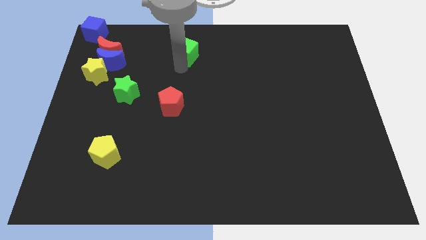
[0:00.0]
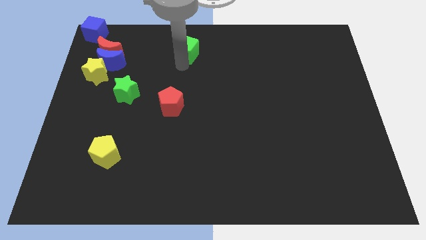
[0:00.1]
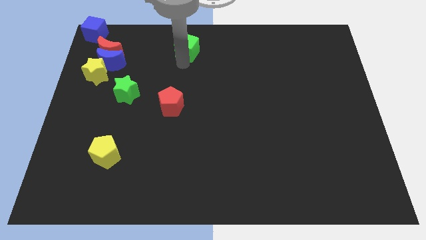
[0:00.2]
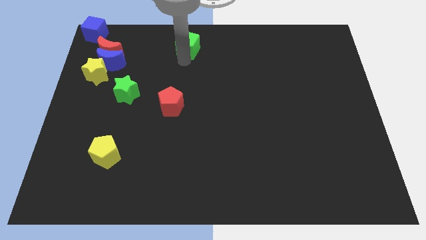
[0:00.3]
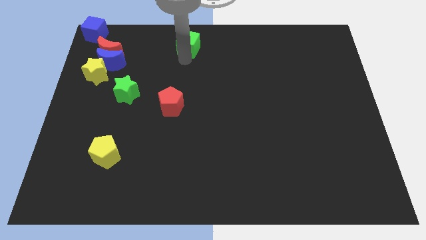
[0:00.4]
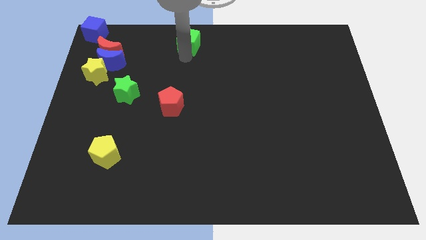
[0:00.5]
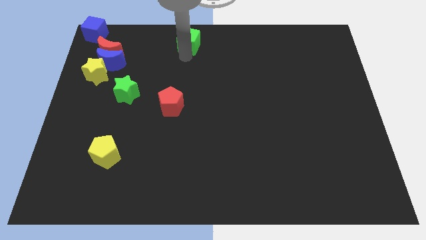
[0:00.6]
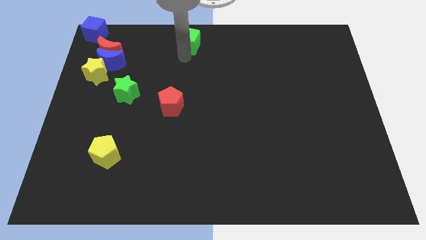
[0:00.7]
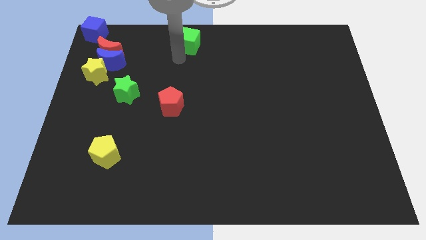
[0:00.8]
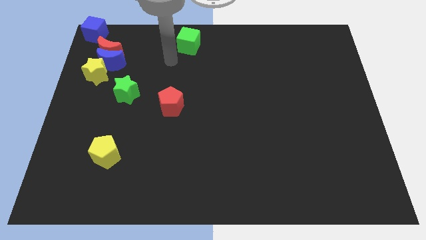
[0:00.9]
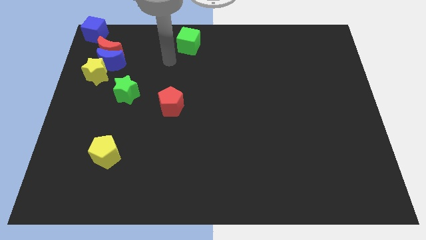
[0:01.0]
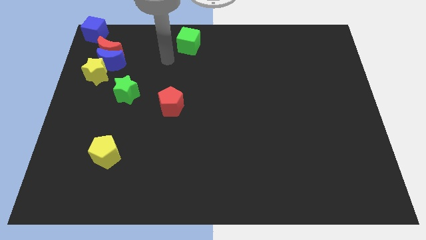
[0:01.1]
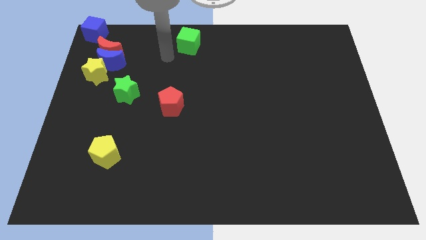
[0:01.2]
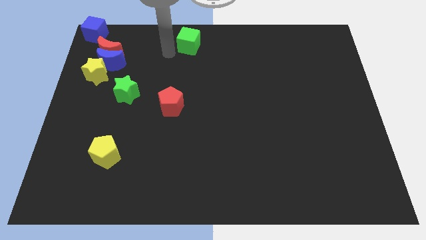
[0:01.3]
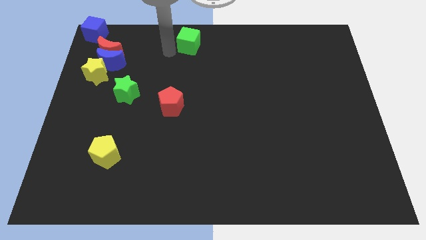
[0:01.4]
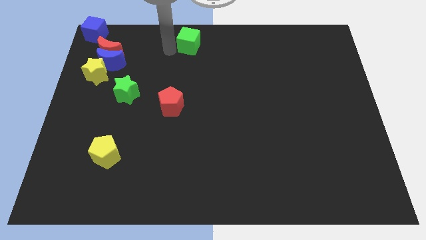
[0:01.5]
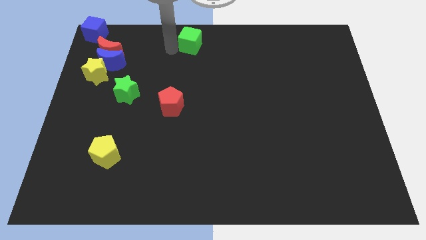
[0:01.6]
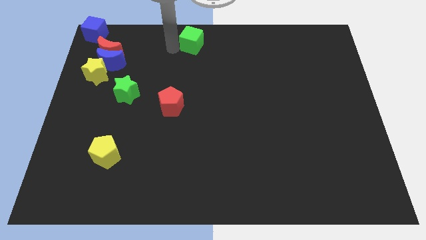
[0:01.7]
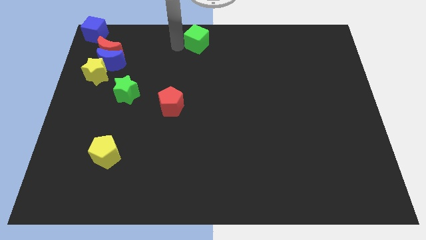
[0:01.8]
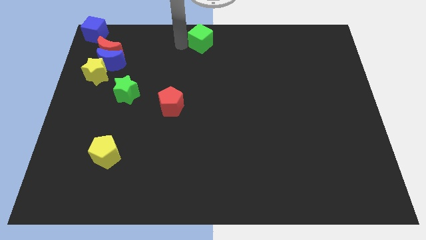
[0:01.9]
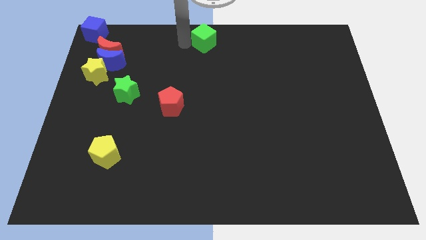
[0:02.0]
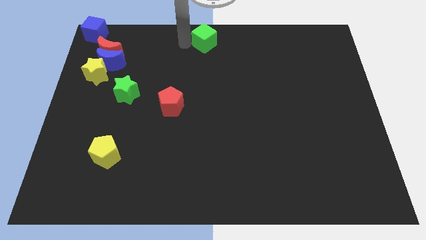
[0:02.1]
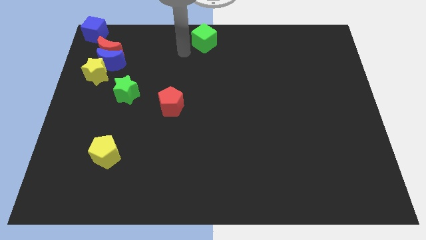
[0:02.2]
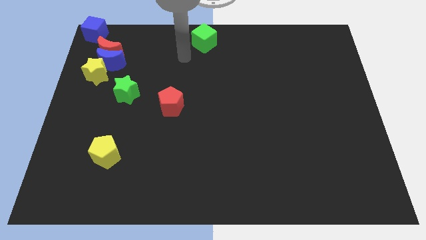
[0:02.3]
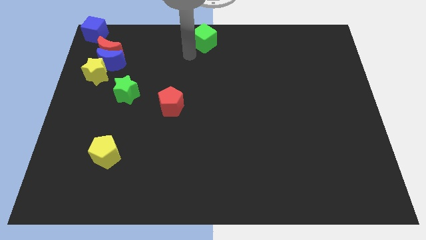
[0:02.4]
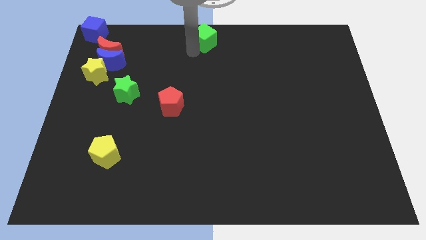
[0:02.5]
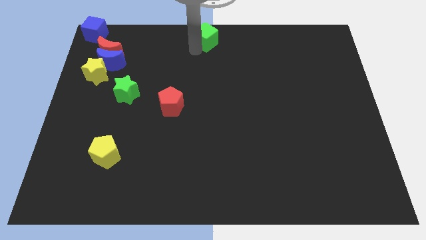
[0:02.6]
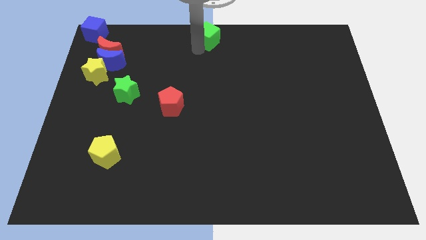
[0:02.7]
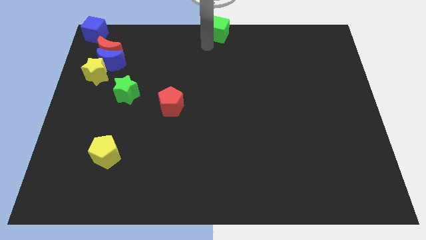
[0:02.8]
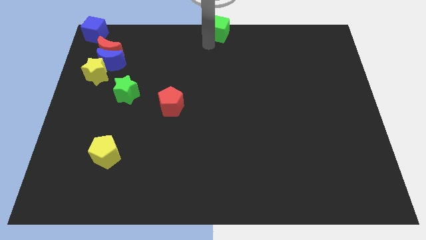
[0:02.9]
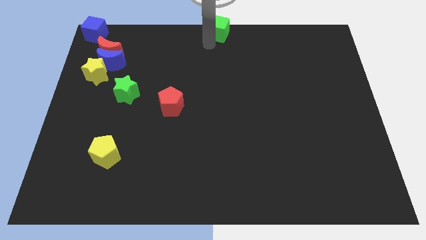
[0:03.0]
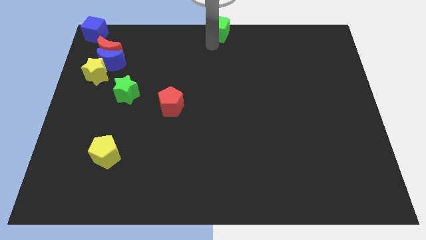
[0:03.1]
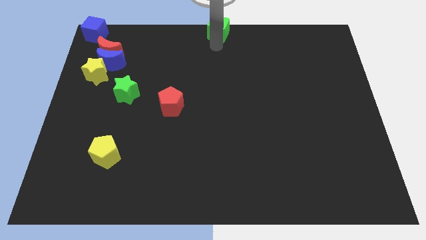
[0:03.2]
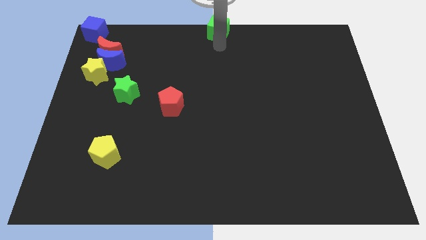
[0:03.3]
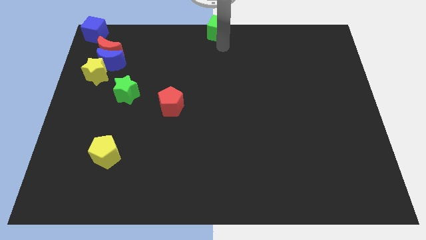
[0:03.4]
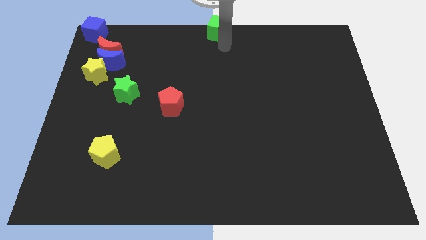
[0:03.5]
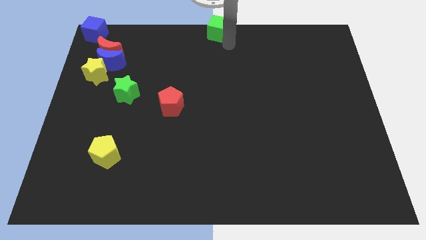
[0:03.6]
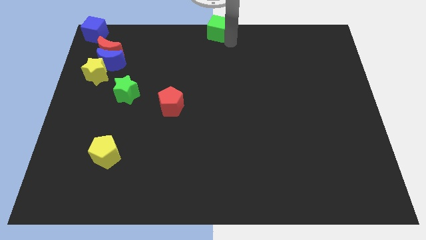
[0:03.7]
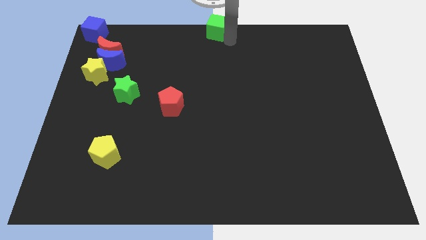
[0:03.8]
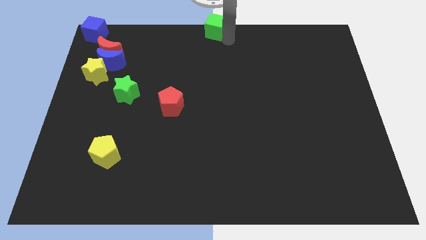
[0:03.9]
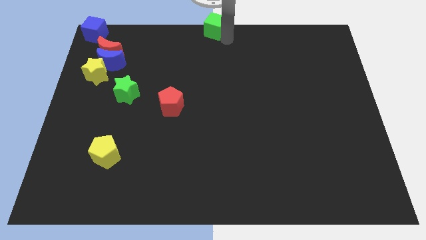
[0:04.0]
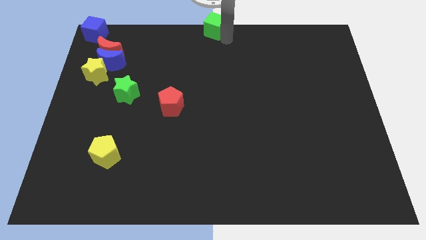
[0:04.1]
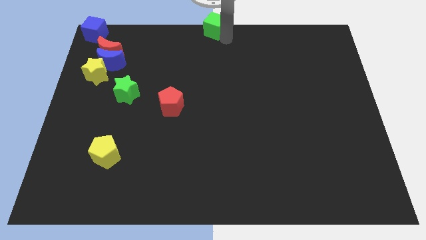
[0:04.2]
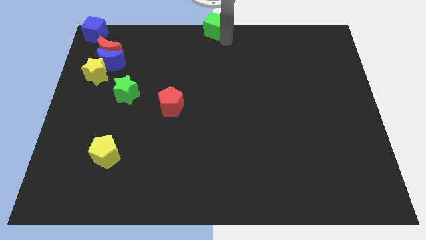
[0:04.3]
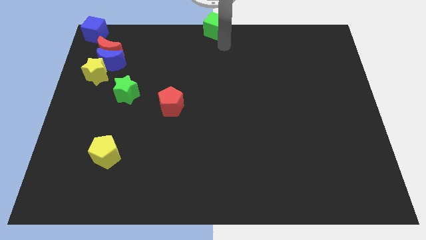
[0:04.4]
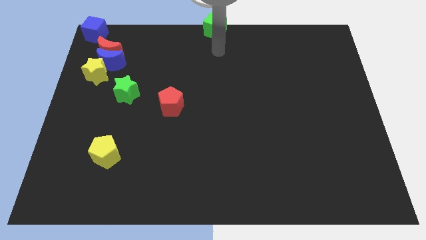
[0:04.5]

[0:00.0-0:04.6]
place the green cube at the top center of the board

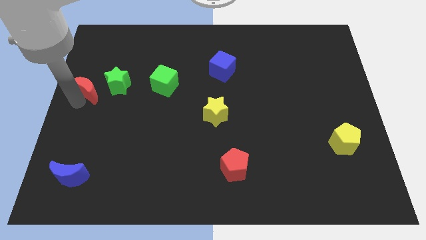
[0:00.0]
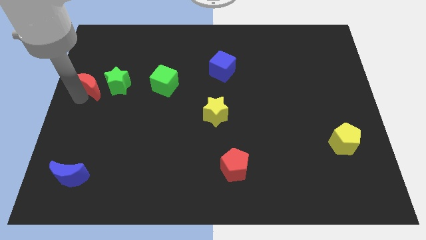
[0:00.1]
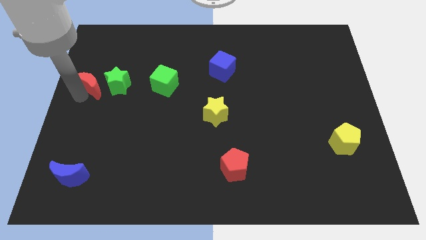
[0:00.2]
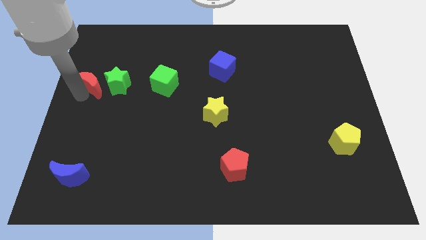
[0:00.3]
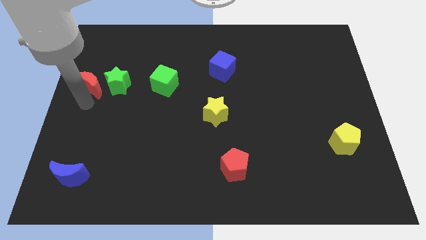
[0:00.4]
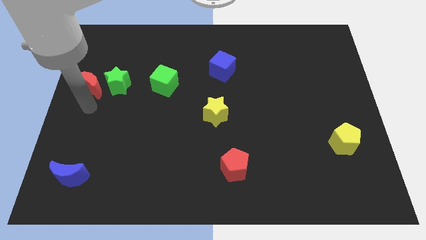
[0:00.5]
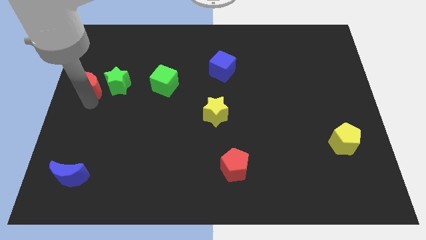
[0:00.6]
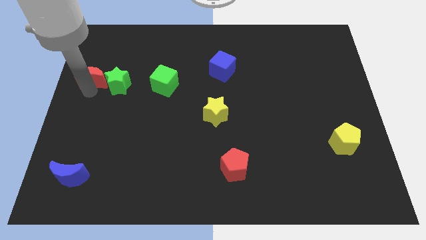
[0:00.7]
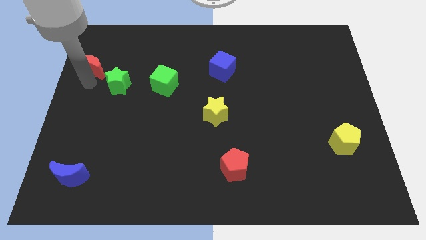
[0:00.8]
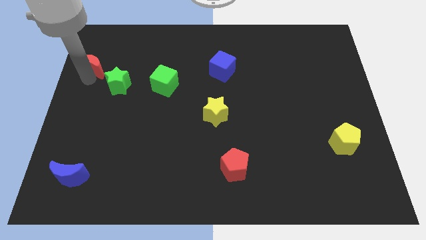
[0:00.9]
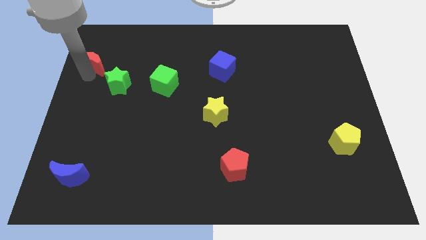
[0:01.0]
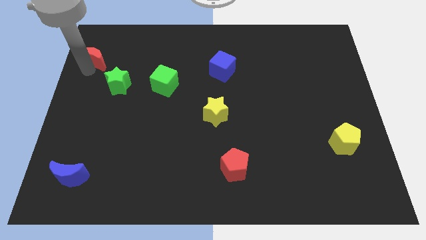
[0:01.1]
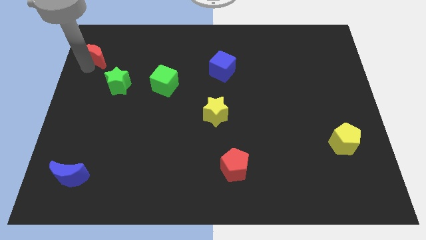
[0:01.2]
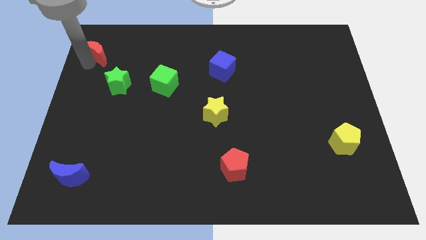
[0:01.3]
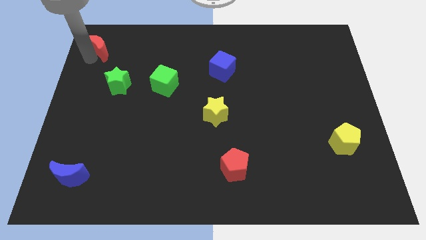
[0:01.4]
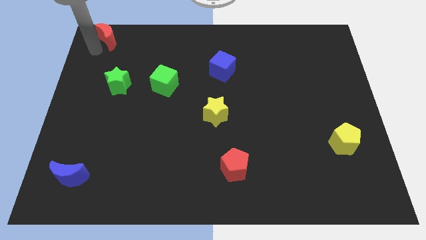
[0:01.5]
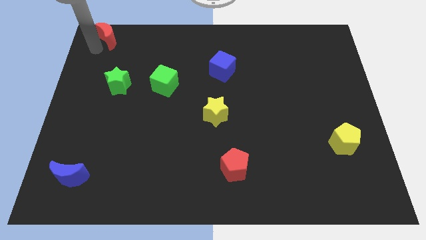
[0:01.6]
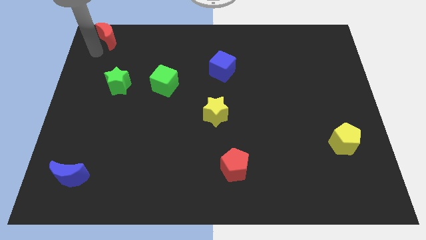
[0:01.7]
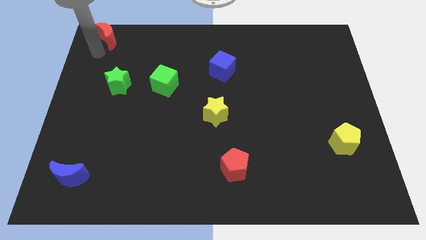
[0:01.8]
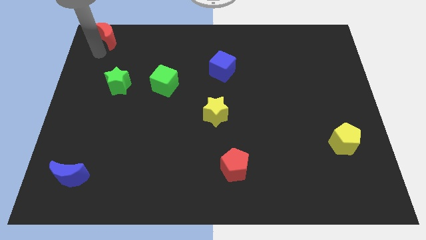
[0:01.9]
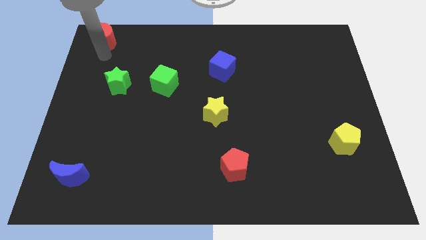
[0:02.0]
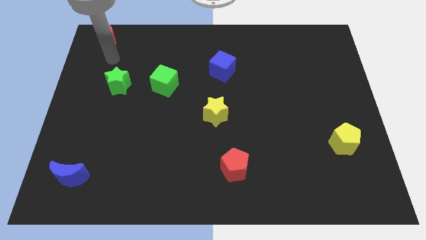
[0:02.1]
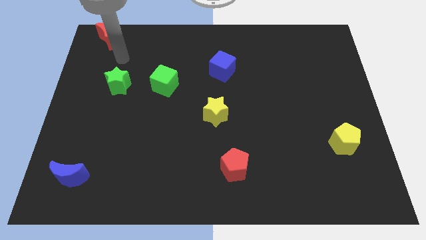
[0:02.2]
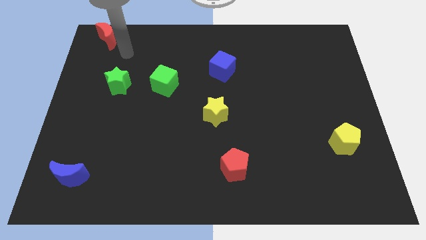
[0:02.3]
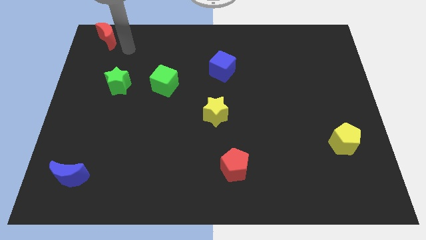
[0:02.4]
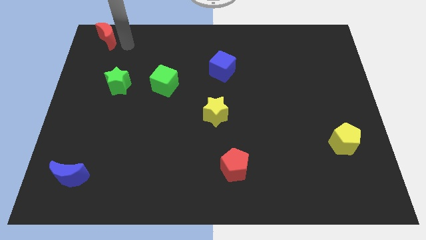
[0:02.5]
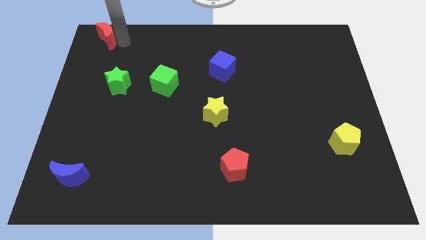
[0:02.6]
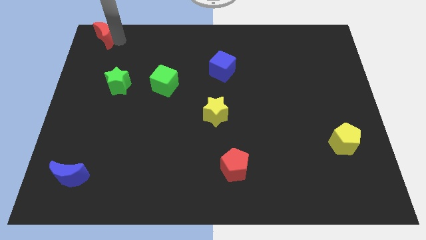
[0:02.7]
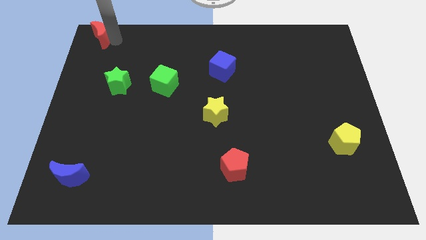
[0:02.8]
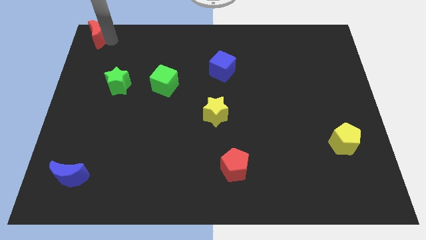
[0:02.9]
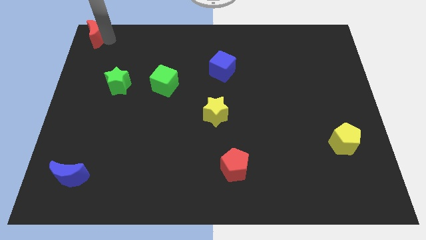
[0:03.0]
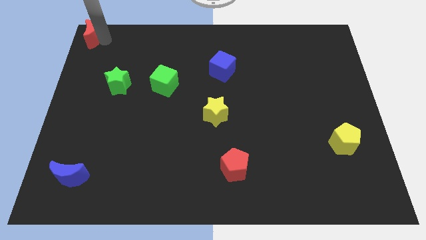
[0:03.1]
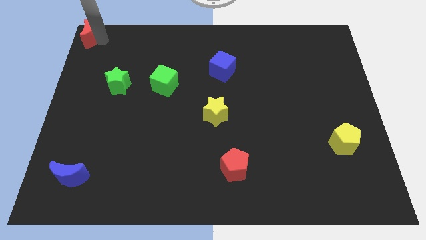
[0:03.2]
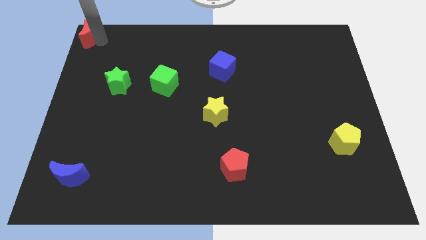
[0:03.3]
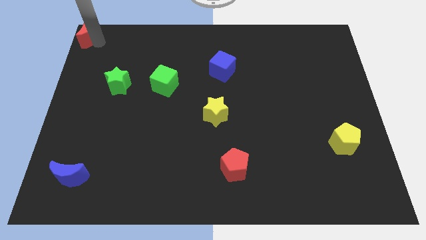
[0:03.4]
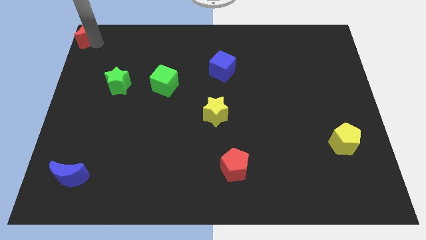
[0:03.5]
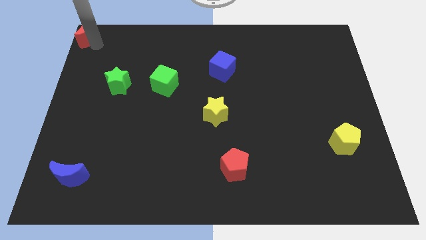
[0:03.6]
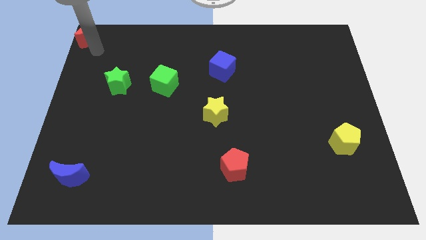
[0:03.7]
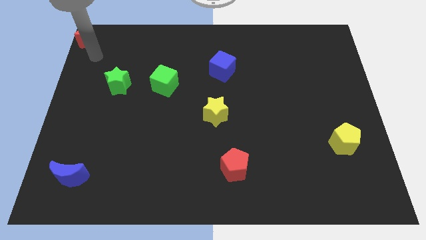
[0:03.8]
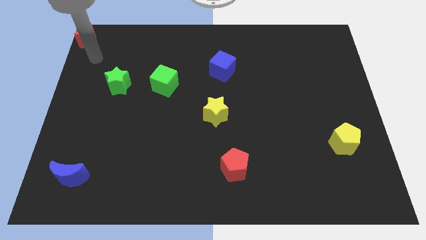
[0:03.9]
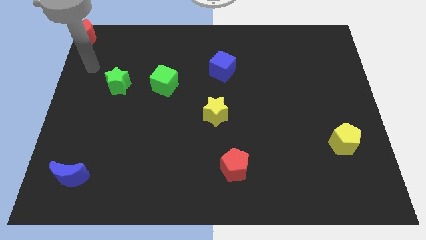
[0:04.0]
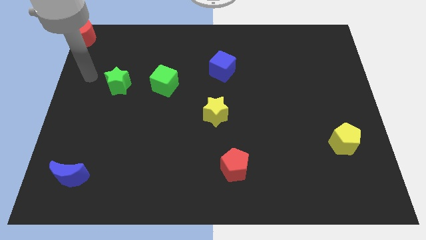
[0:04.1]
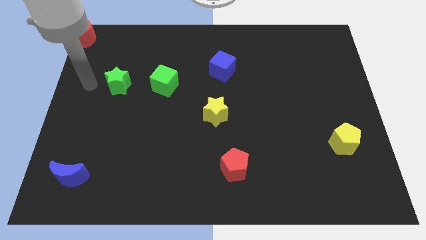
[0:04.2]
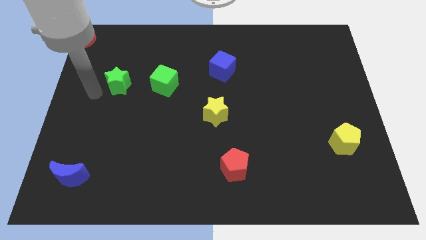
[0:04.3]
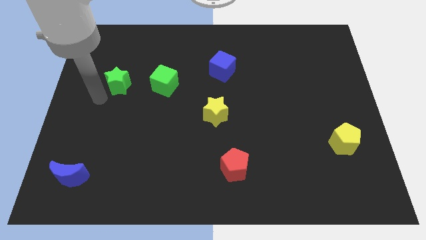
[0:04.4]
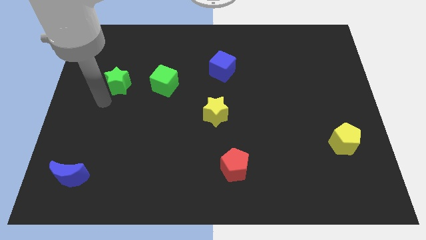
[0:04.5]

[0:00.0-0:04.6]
place red moon to the top left corner of the board
